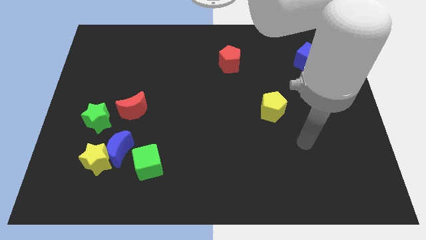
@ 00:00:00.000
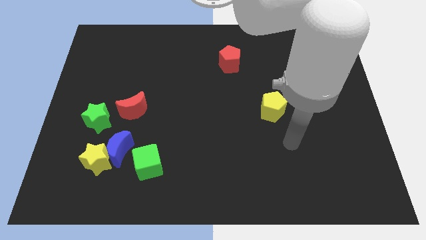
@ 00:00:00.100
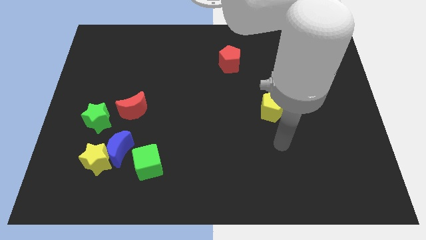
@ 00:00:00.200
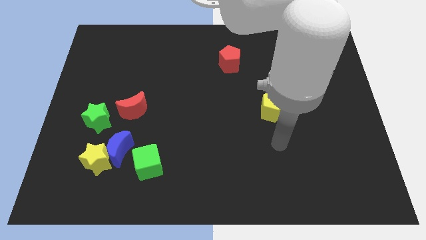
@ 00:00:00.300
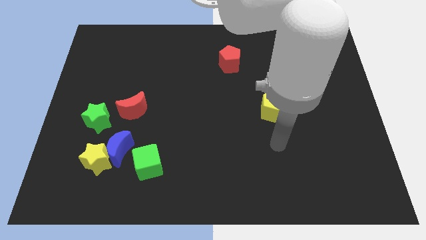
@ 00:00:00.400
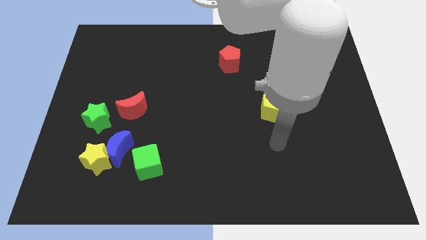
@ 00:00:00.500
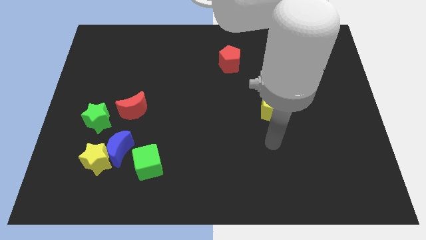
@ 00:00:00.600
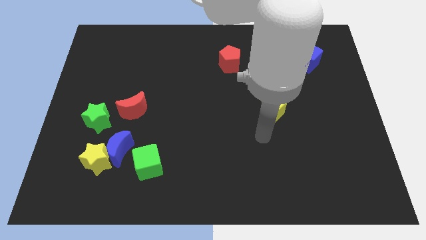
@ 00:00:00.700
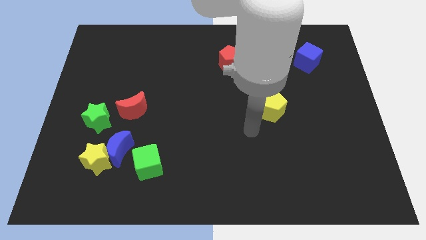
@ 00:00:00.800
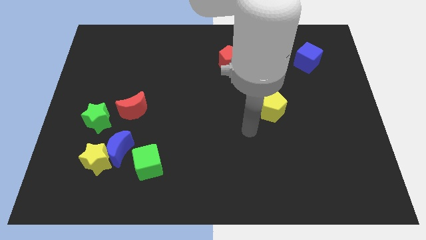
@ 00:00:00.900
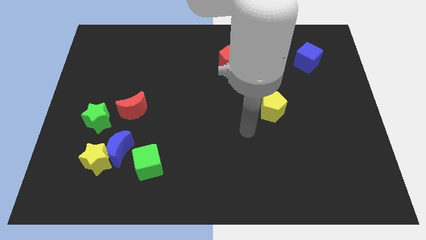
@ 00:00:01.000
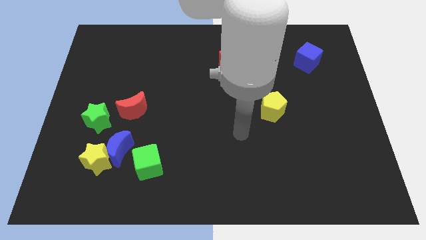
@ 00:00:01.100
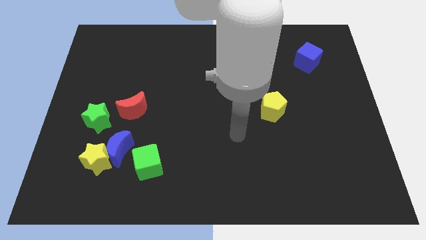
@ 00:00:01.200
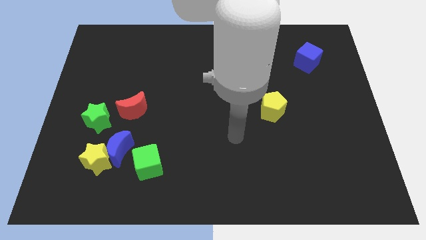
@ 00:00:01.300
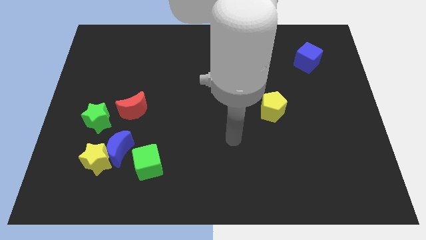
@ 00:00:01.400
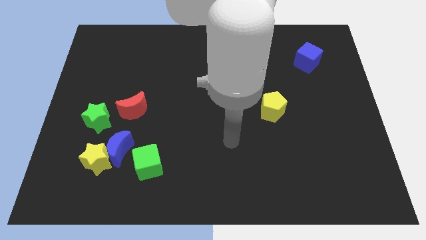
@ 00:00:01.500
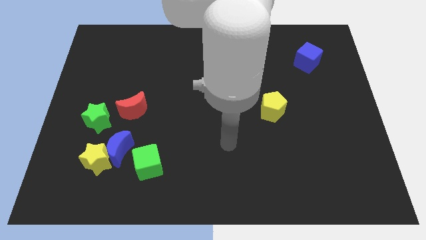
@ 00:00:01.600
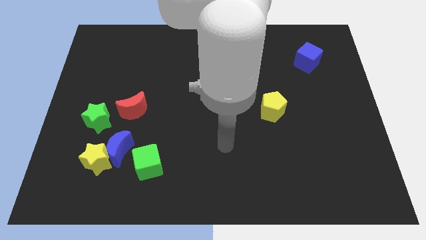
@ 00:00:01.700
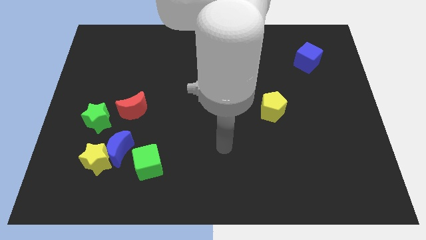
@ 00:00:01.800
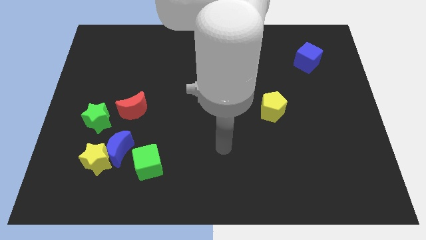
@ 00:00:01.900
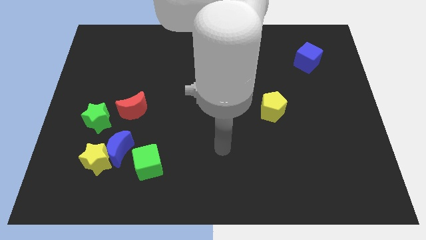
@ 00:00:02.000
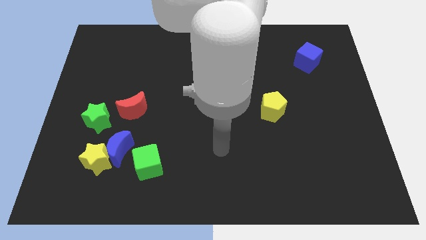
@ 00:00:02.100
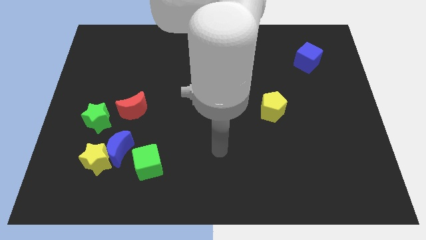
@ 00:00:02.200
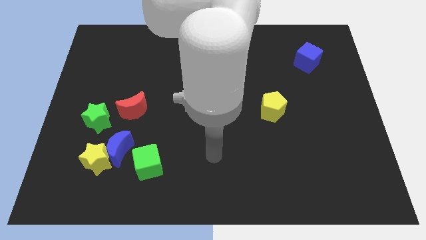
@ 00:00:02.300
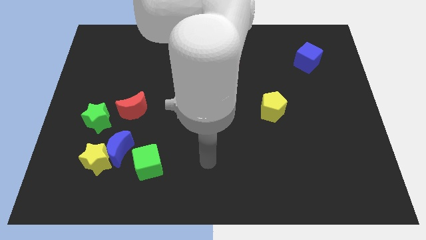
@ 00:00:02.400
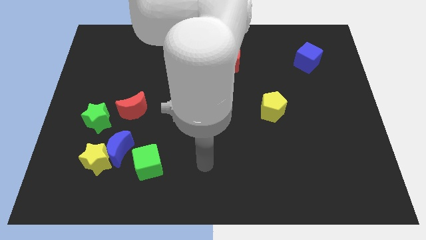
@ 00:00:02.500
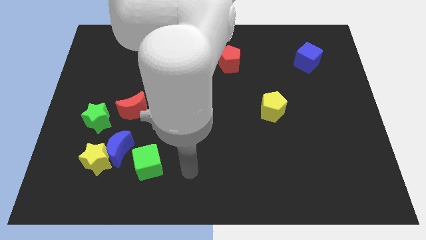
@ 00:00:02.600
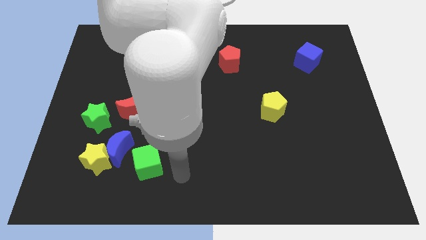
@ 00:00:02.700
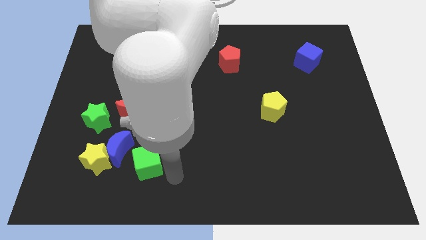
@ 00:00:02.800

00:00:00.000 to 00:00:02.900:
point your arm at the right of the green cube

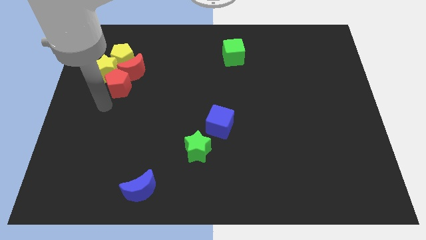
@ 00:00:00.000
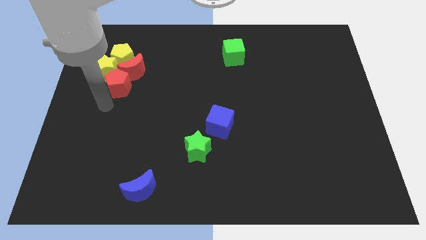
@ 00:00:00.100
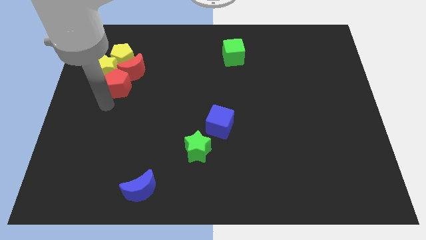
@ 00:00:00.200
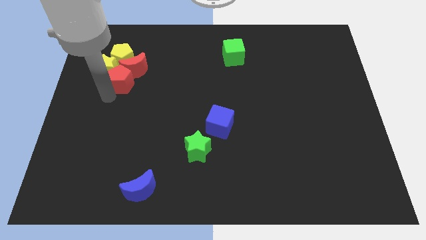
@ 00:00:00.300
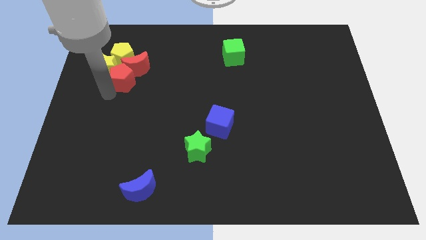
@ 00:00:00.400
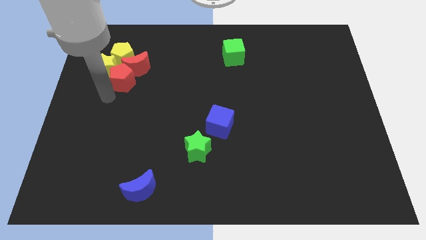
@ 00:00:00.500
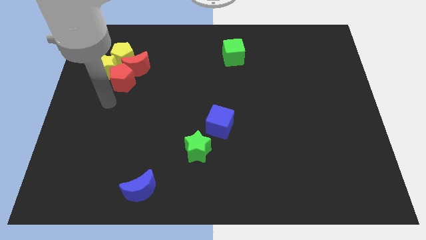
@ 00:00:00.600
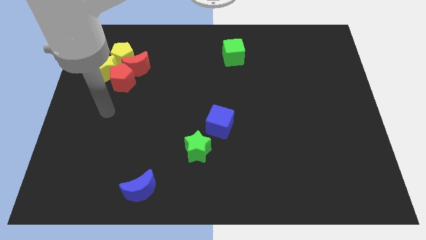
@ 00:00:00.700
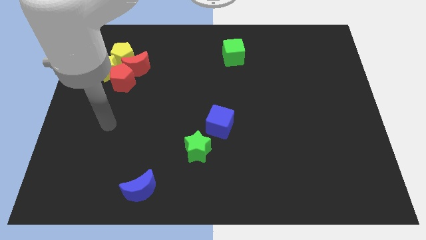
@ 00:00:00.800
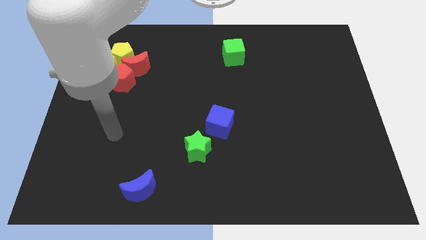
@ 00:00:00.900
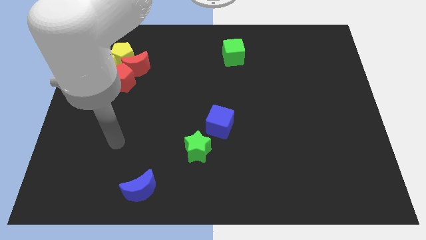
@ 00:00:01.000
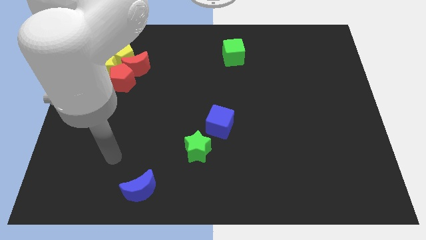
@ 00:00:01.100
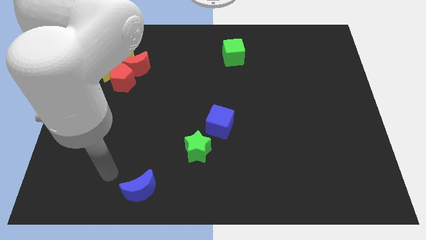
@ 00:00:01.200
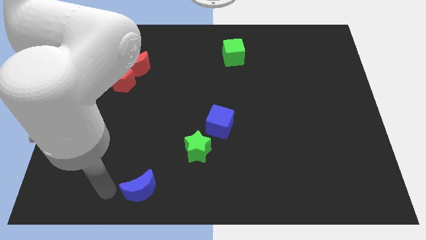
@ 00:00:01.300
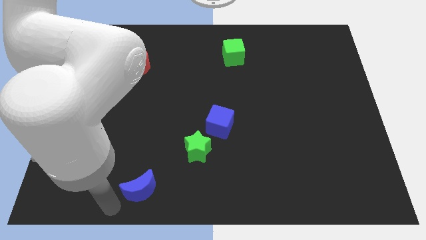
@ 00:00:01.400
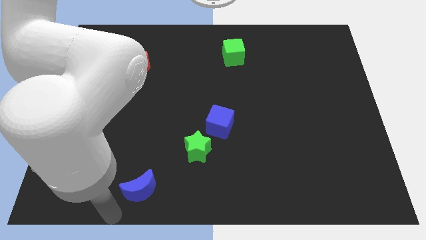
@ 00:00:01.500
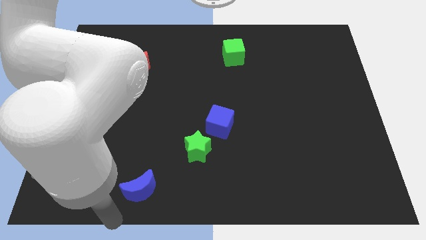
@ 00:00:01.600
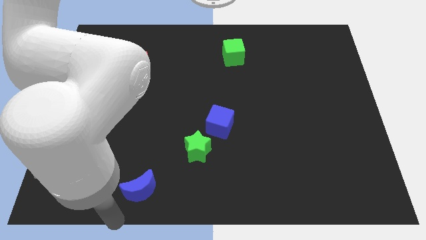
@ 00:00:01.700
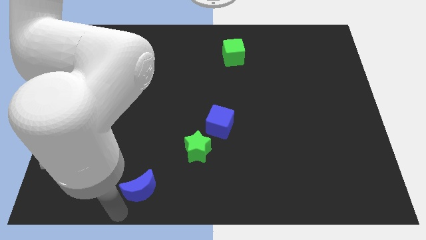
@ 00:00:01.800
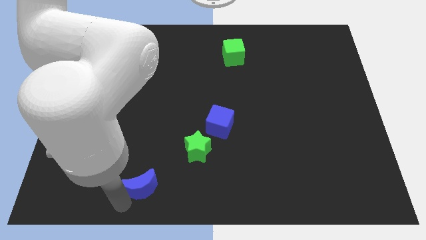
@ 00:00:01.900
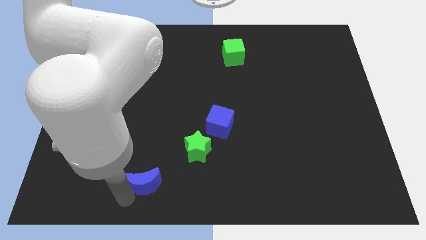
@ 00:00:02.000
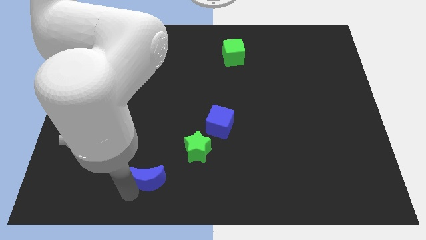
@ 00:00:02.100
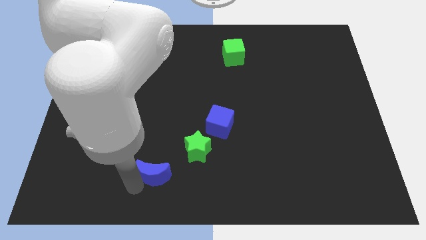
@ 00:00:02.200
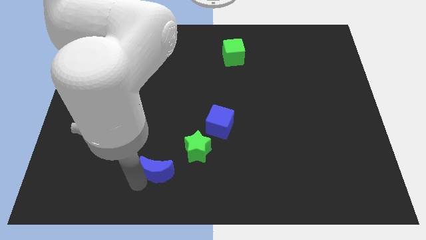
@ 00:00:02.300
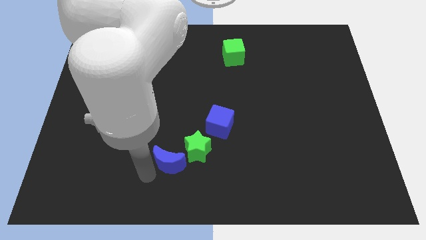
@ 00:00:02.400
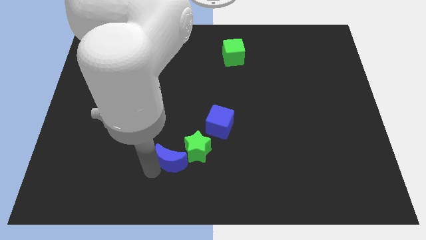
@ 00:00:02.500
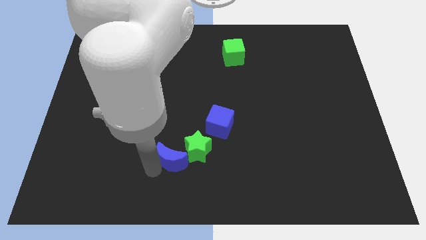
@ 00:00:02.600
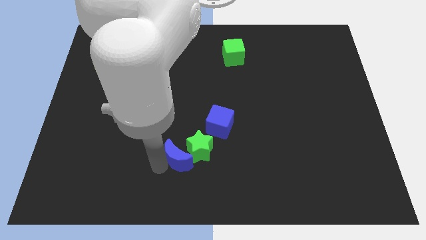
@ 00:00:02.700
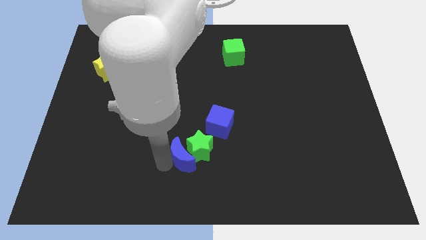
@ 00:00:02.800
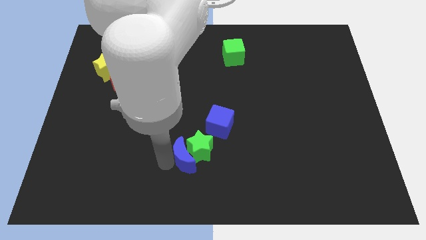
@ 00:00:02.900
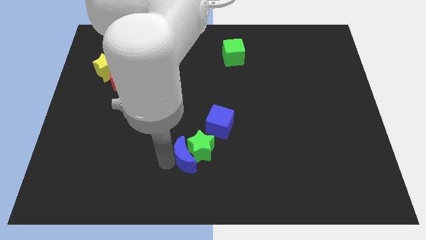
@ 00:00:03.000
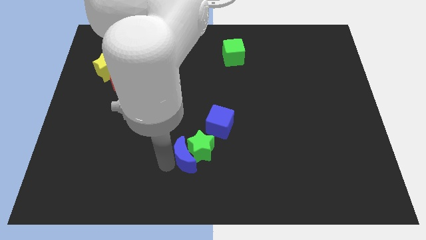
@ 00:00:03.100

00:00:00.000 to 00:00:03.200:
push the blue crescent into the green star

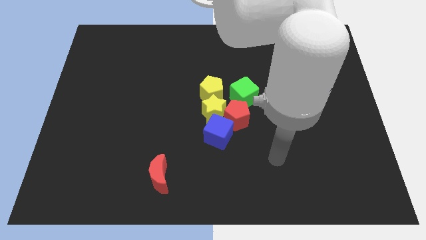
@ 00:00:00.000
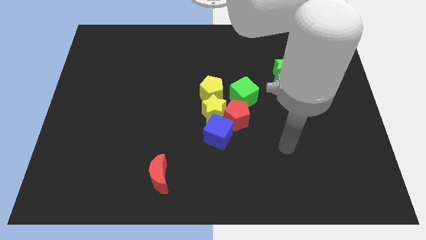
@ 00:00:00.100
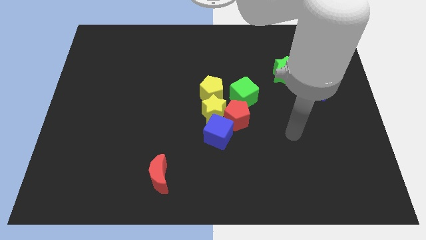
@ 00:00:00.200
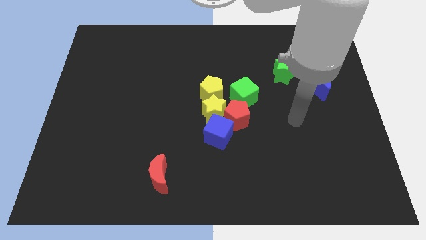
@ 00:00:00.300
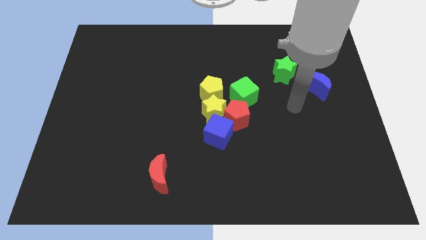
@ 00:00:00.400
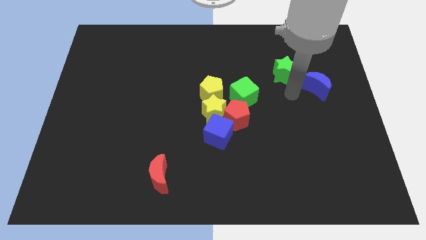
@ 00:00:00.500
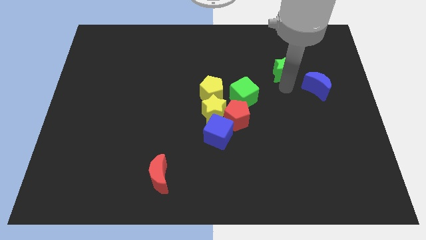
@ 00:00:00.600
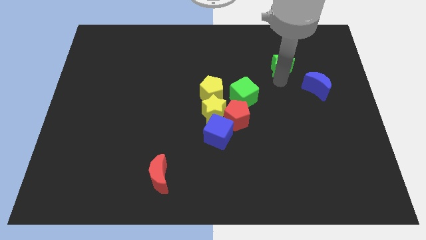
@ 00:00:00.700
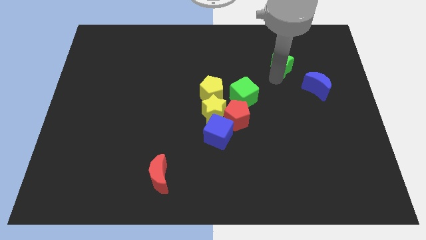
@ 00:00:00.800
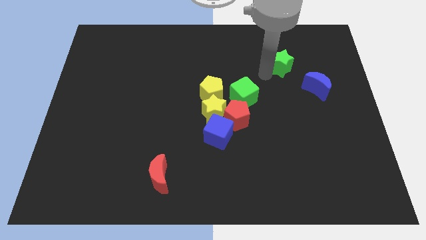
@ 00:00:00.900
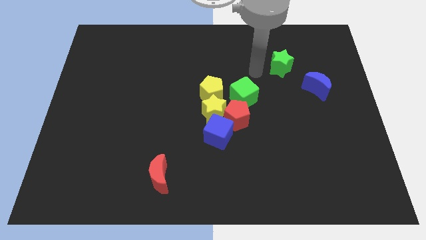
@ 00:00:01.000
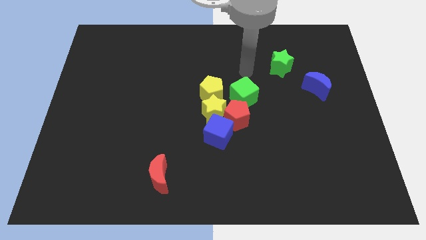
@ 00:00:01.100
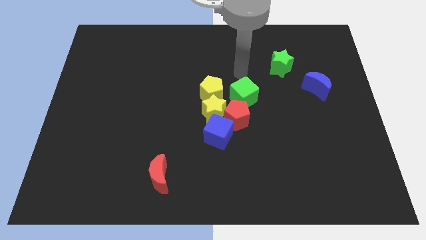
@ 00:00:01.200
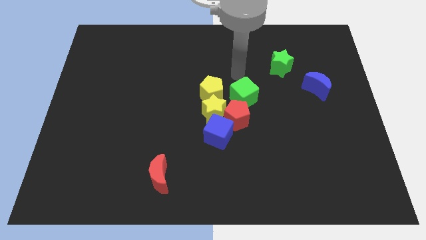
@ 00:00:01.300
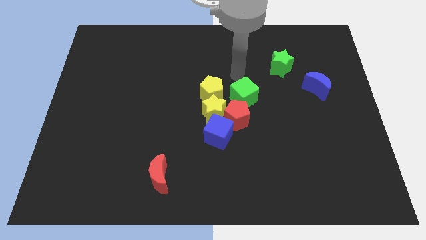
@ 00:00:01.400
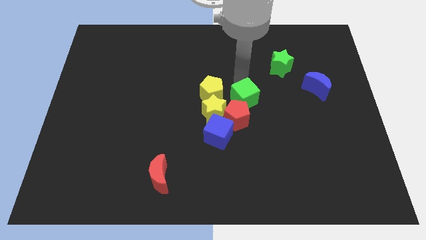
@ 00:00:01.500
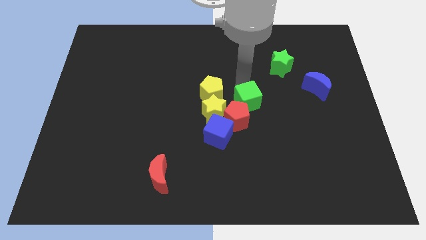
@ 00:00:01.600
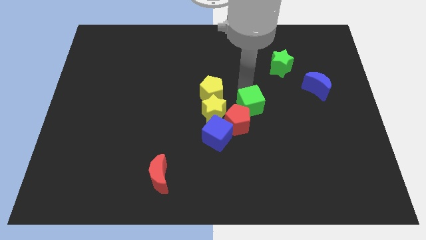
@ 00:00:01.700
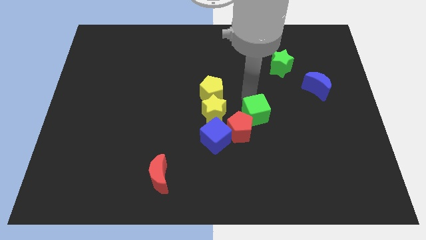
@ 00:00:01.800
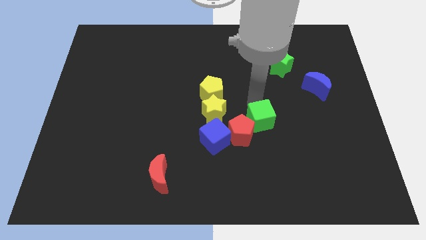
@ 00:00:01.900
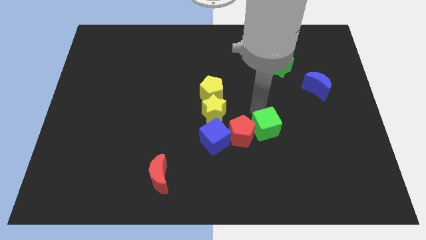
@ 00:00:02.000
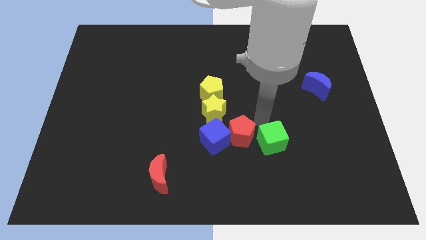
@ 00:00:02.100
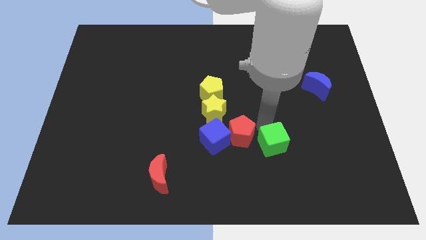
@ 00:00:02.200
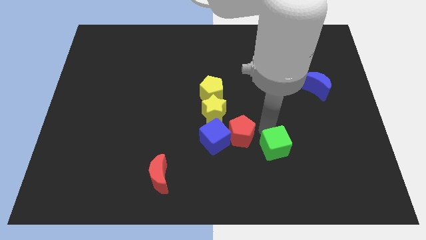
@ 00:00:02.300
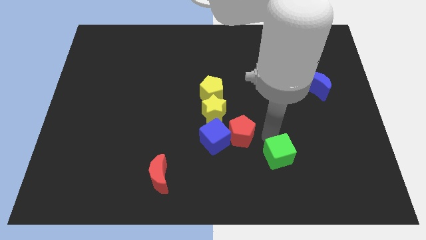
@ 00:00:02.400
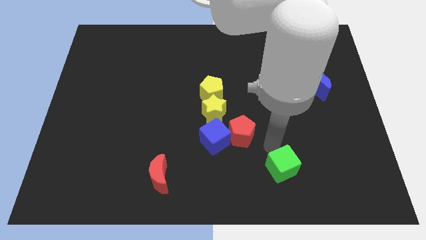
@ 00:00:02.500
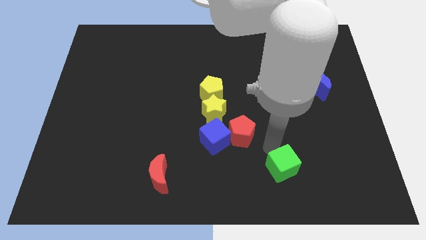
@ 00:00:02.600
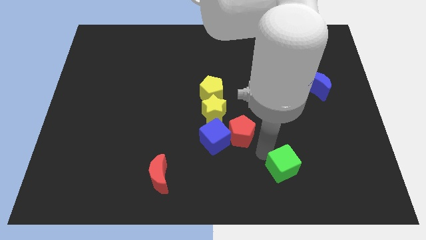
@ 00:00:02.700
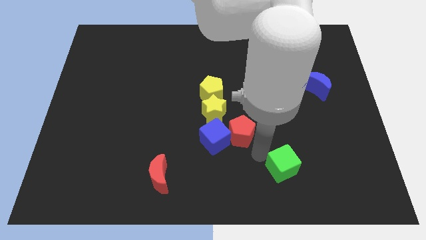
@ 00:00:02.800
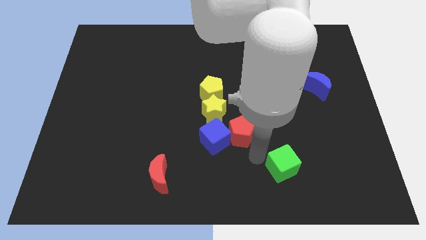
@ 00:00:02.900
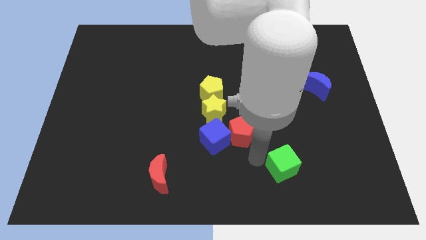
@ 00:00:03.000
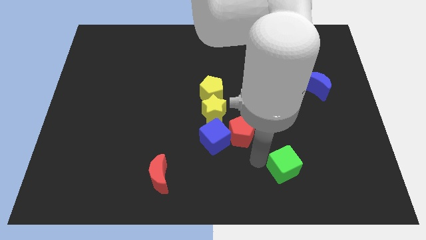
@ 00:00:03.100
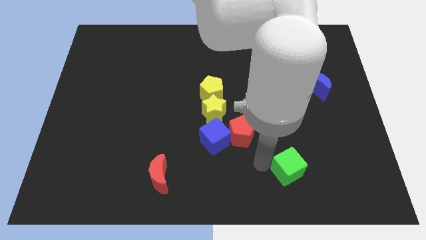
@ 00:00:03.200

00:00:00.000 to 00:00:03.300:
push the green cube towards the bottom
